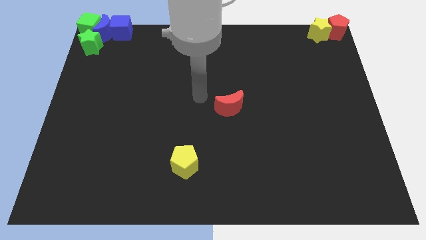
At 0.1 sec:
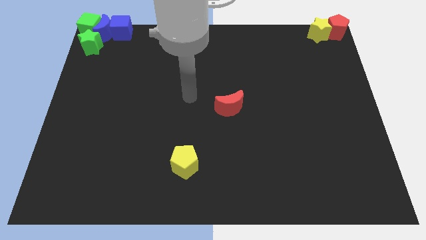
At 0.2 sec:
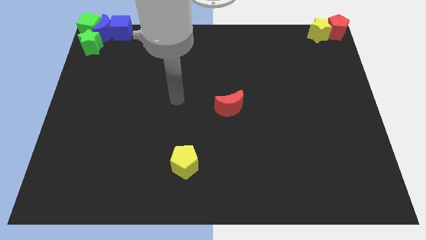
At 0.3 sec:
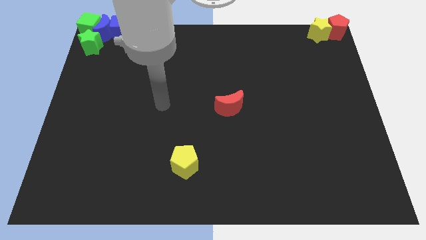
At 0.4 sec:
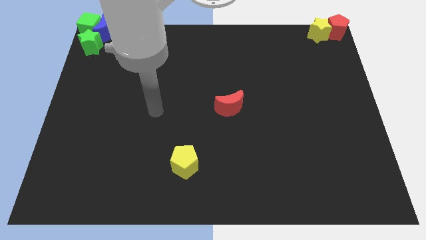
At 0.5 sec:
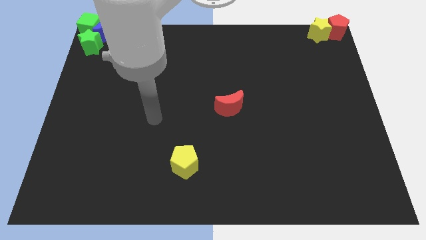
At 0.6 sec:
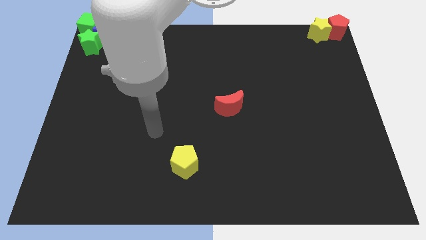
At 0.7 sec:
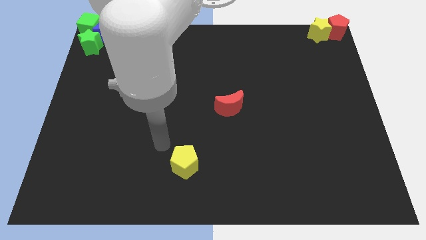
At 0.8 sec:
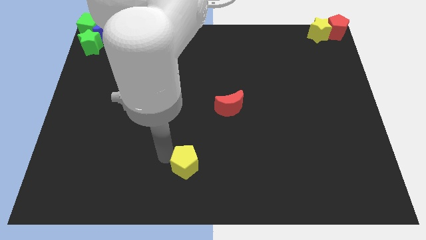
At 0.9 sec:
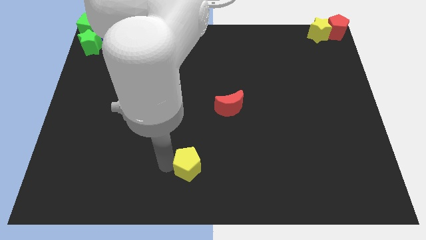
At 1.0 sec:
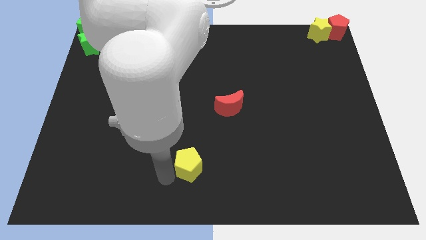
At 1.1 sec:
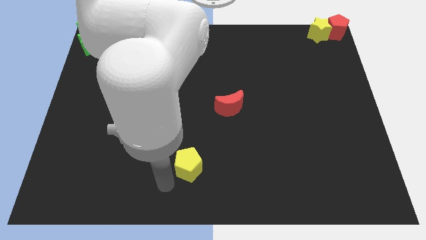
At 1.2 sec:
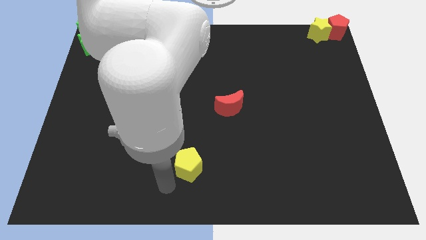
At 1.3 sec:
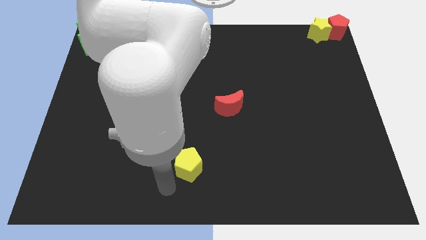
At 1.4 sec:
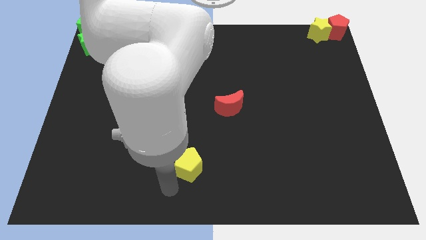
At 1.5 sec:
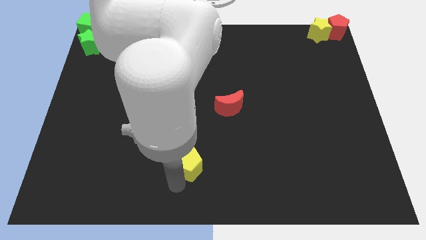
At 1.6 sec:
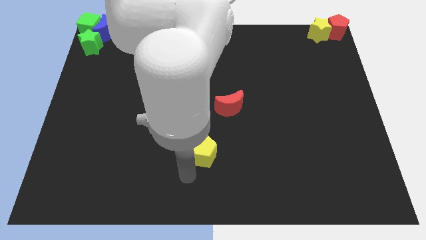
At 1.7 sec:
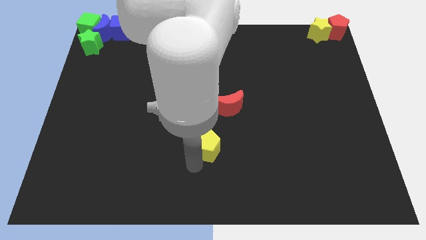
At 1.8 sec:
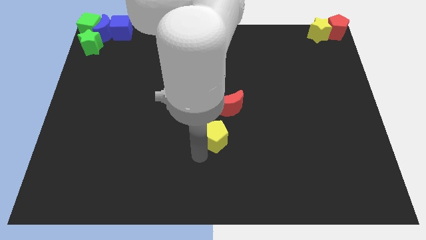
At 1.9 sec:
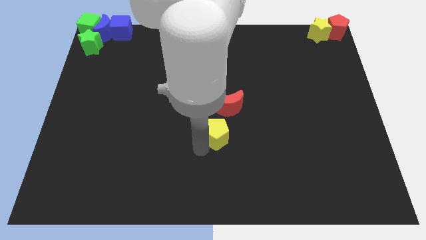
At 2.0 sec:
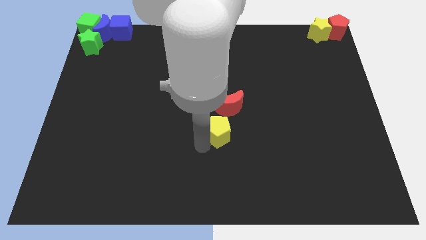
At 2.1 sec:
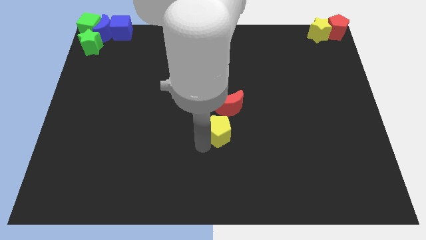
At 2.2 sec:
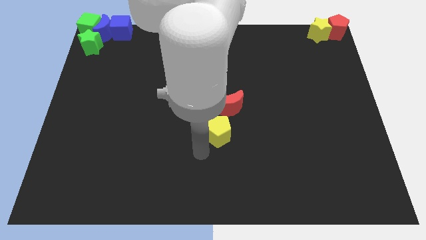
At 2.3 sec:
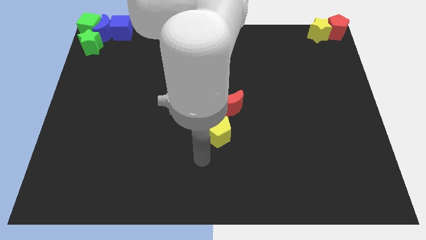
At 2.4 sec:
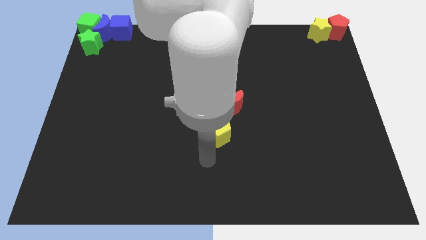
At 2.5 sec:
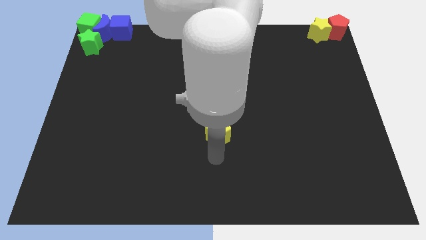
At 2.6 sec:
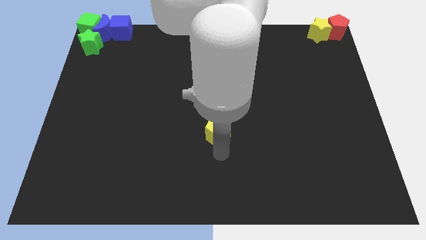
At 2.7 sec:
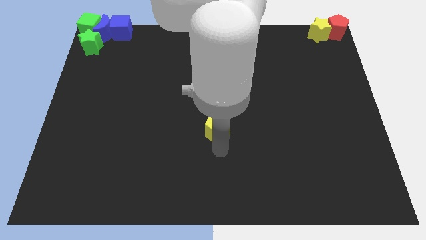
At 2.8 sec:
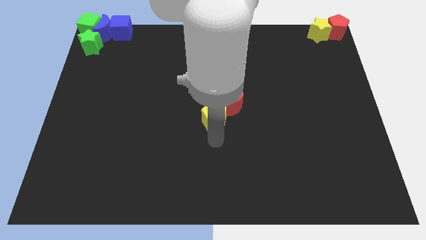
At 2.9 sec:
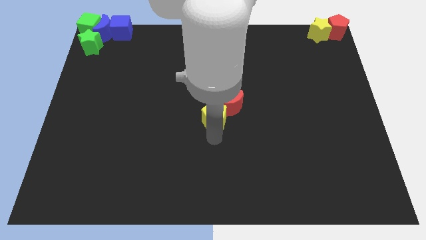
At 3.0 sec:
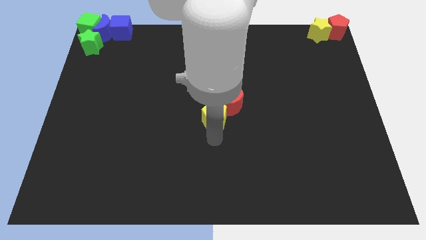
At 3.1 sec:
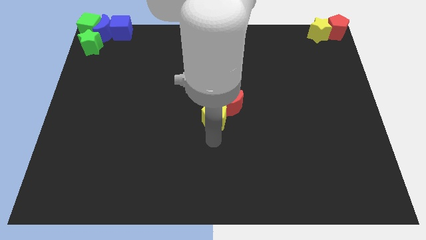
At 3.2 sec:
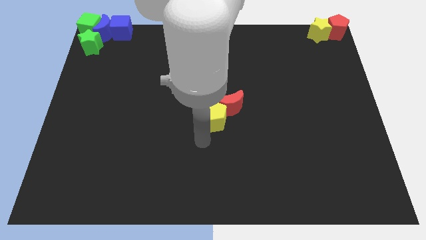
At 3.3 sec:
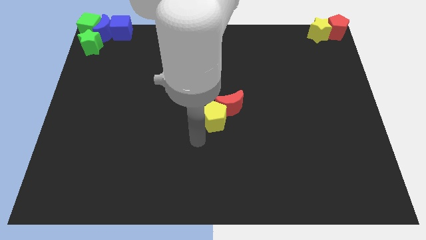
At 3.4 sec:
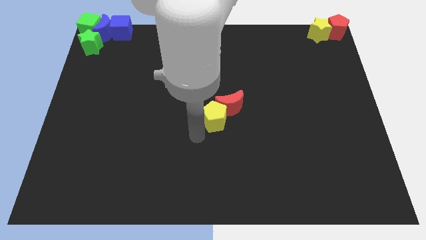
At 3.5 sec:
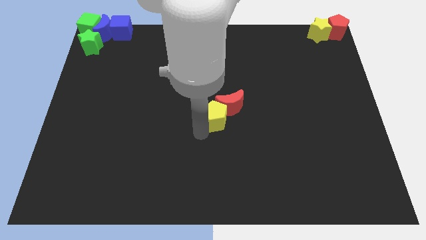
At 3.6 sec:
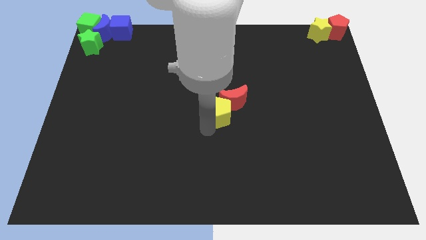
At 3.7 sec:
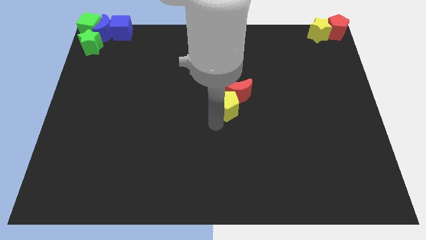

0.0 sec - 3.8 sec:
move the yellow pentagon to the bottom left side of the red moon

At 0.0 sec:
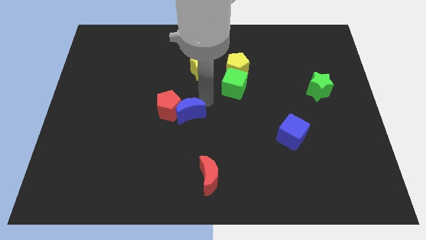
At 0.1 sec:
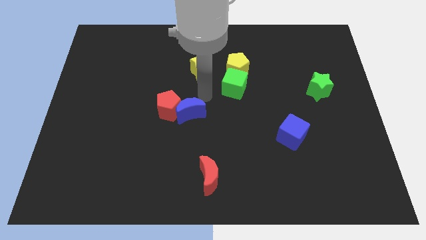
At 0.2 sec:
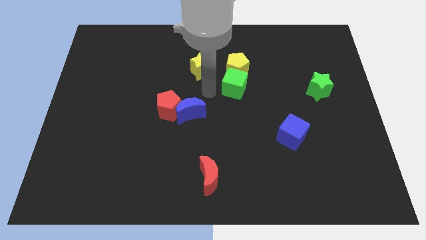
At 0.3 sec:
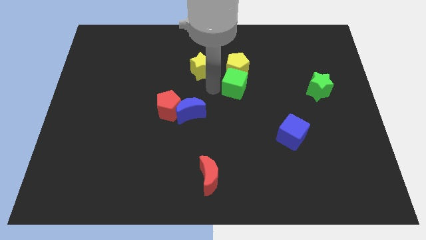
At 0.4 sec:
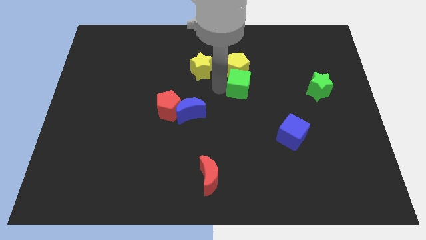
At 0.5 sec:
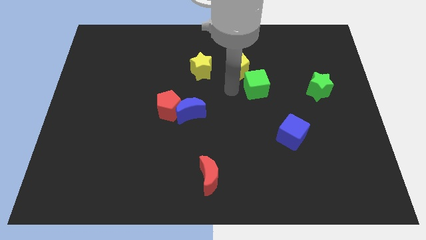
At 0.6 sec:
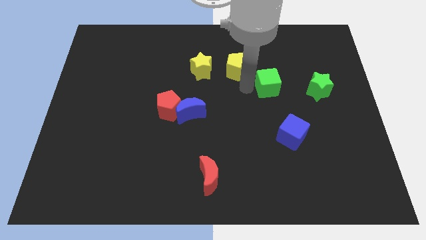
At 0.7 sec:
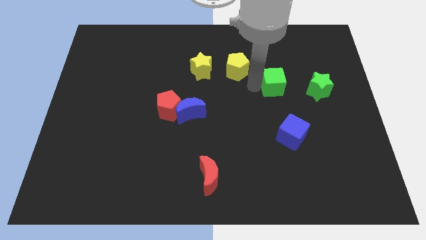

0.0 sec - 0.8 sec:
place green cube to the bottom right of yellow pentagon

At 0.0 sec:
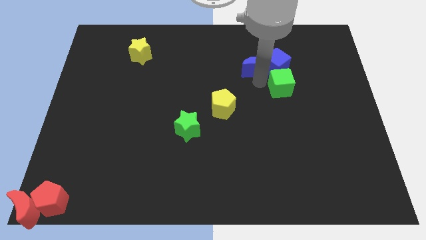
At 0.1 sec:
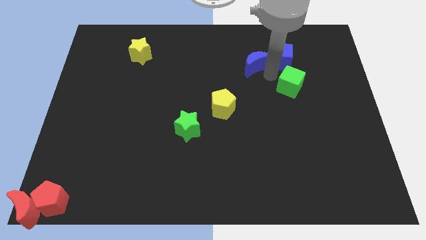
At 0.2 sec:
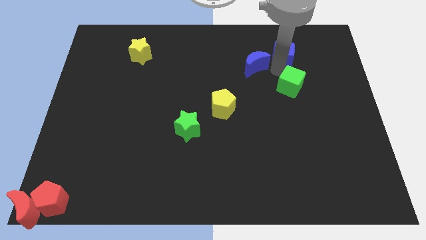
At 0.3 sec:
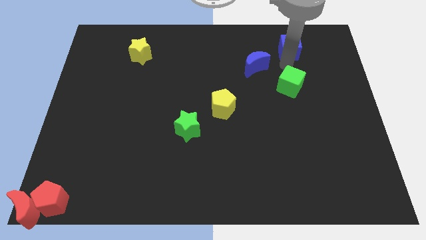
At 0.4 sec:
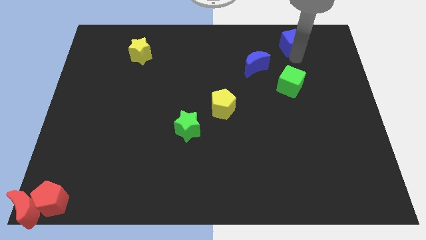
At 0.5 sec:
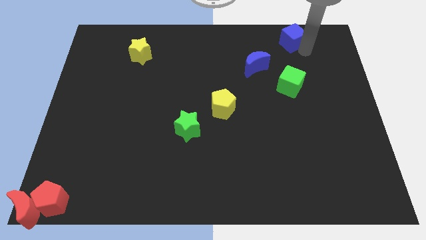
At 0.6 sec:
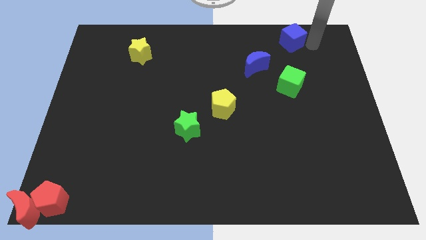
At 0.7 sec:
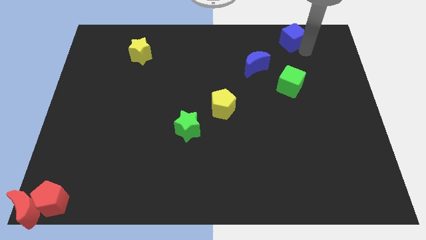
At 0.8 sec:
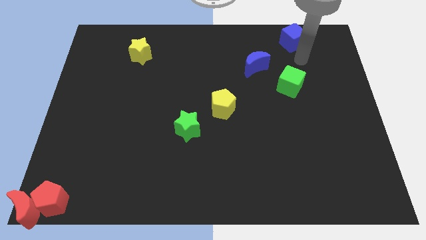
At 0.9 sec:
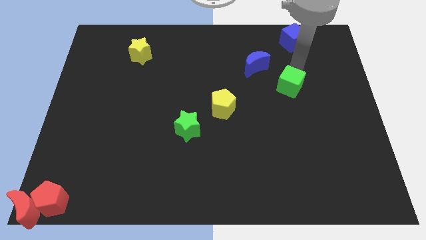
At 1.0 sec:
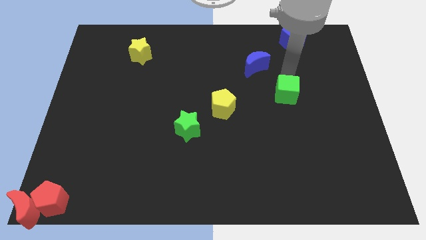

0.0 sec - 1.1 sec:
push the blue cube to the top right of the board

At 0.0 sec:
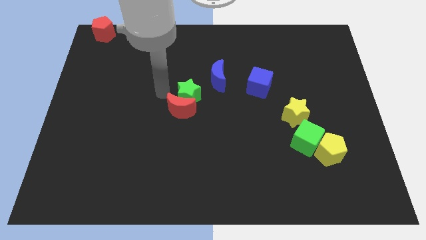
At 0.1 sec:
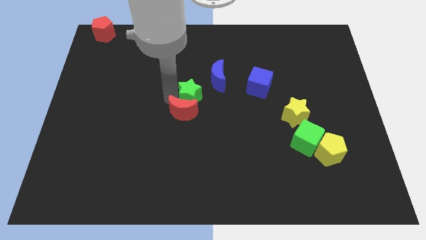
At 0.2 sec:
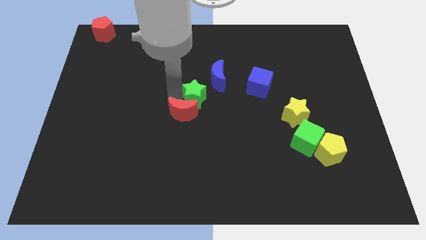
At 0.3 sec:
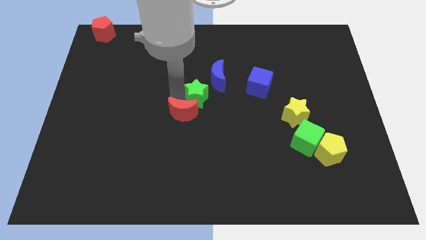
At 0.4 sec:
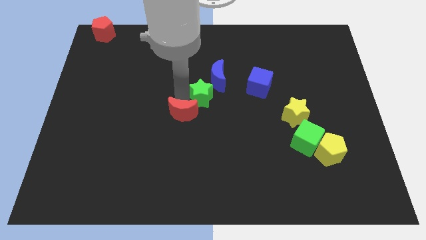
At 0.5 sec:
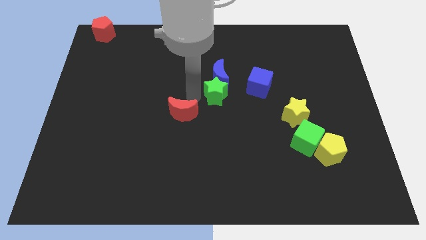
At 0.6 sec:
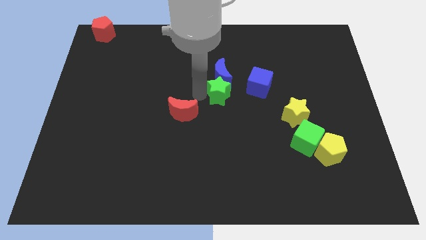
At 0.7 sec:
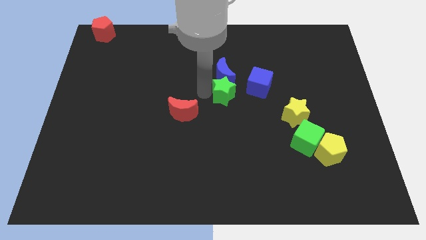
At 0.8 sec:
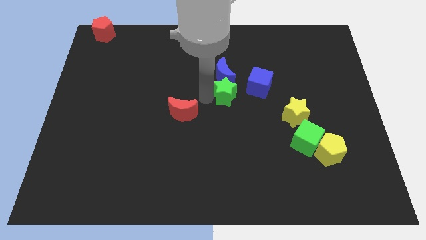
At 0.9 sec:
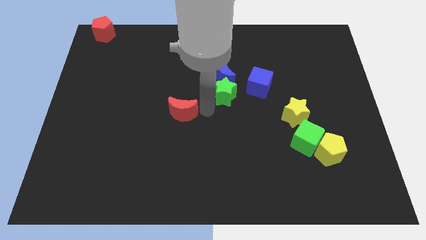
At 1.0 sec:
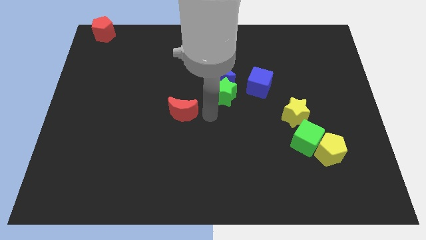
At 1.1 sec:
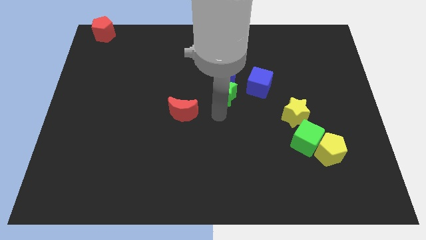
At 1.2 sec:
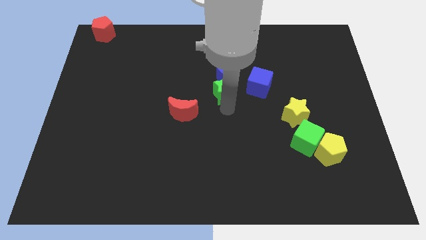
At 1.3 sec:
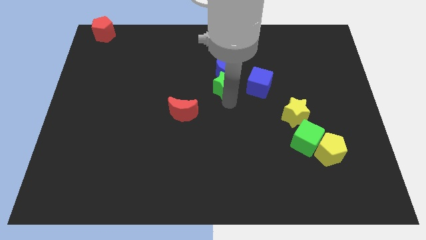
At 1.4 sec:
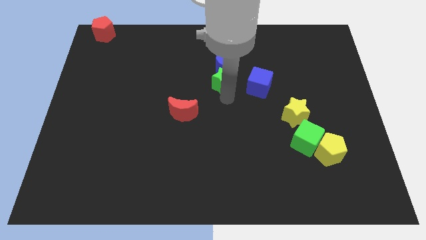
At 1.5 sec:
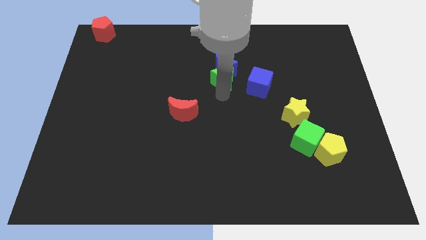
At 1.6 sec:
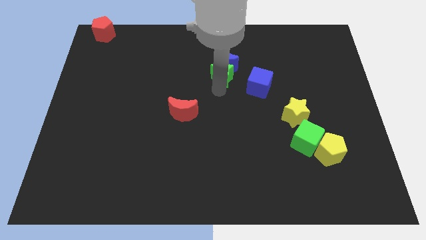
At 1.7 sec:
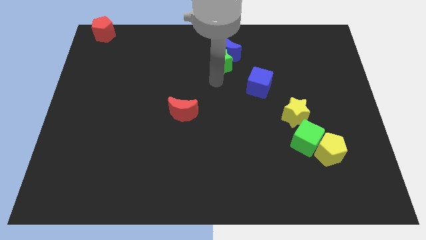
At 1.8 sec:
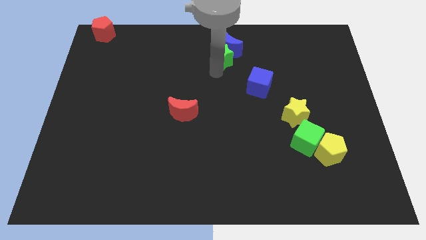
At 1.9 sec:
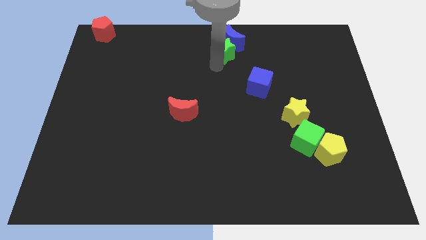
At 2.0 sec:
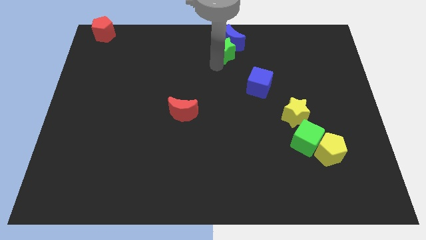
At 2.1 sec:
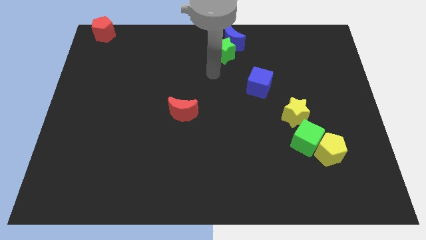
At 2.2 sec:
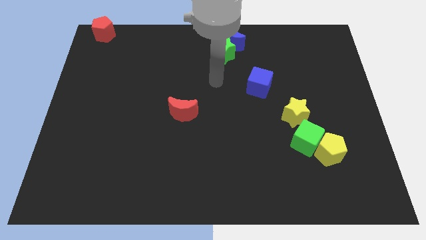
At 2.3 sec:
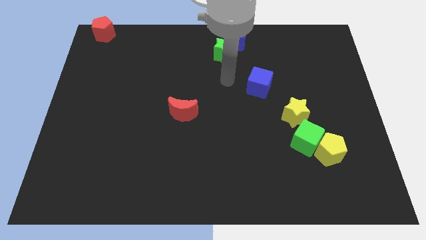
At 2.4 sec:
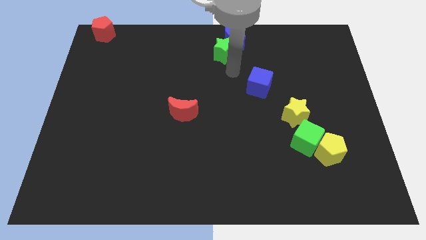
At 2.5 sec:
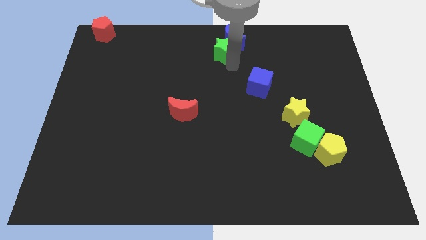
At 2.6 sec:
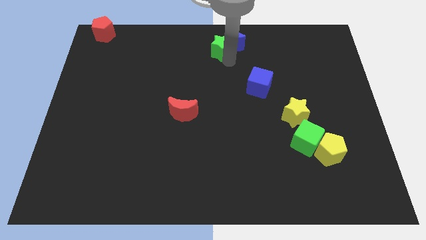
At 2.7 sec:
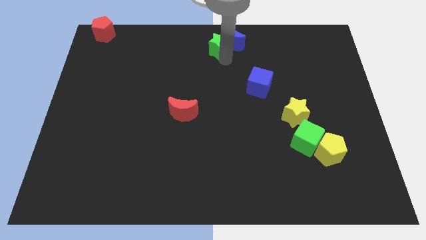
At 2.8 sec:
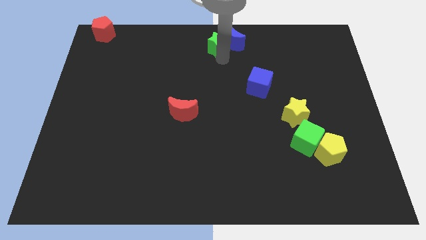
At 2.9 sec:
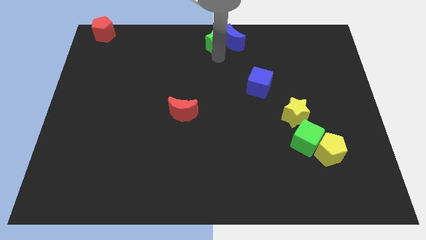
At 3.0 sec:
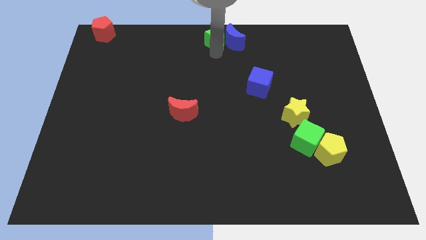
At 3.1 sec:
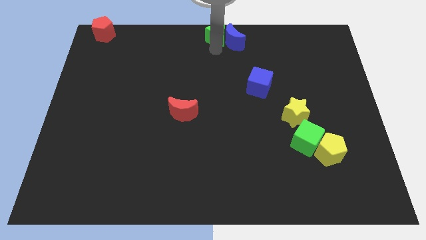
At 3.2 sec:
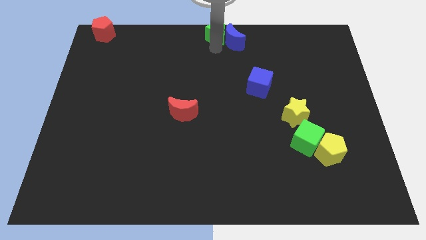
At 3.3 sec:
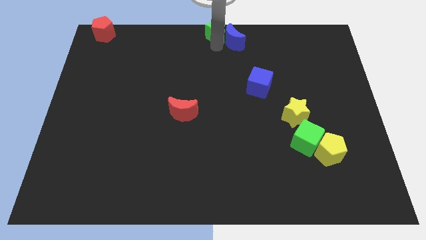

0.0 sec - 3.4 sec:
drag the green star and blue moon to the top center of the board
